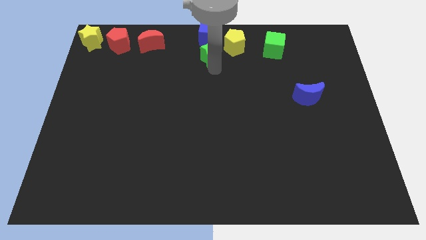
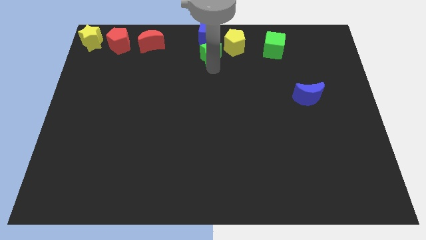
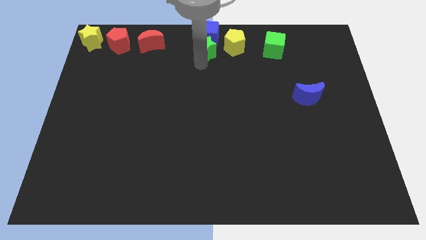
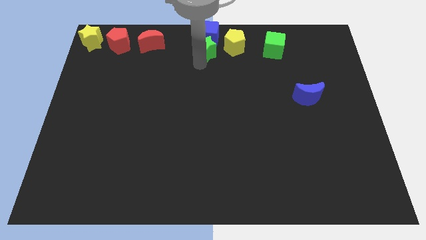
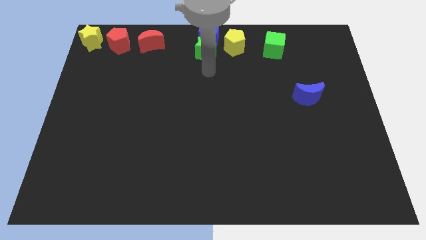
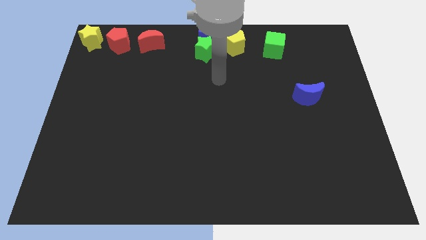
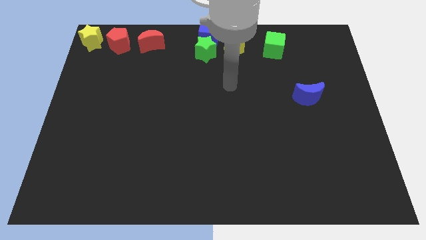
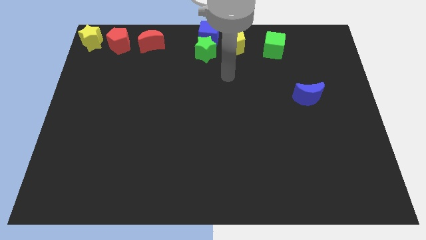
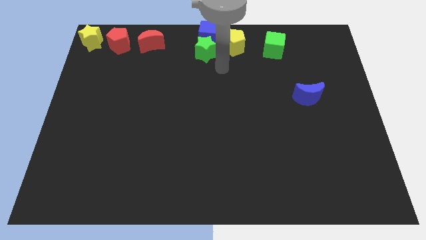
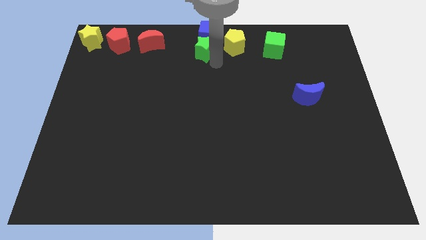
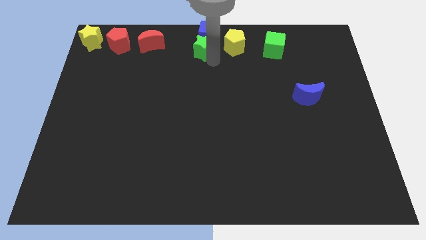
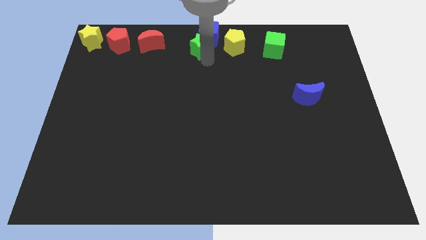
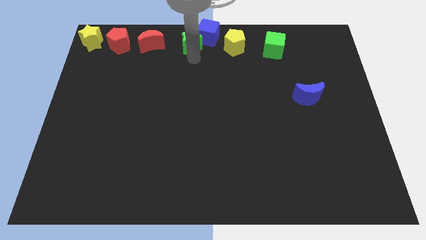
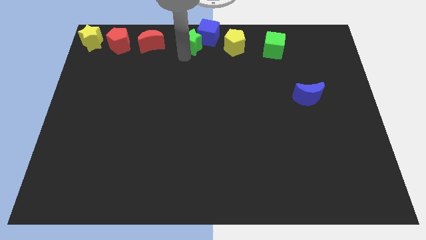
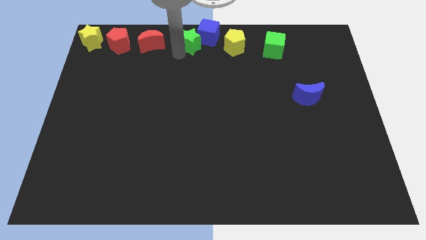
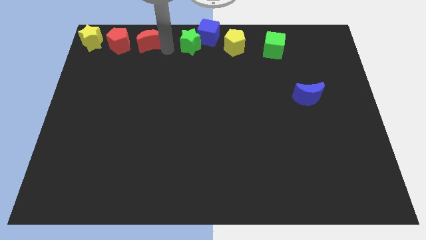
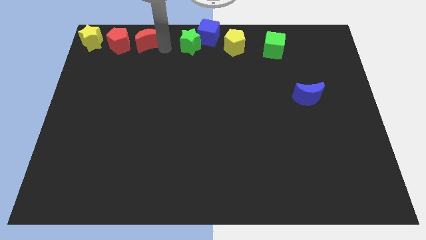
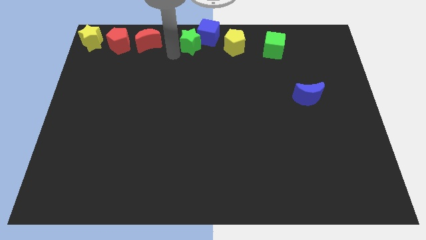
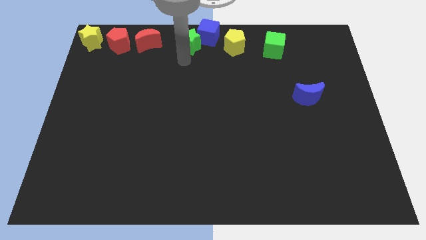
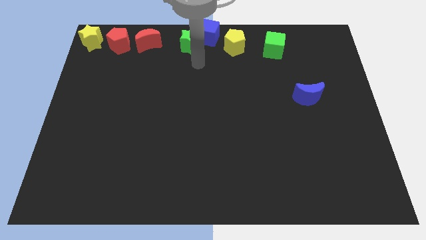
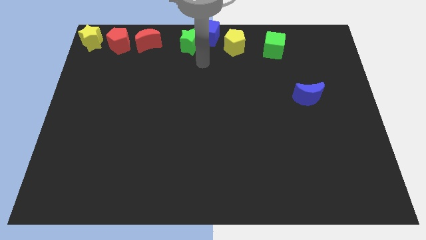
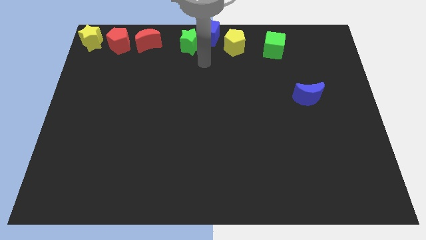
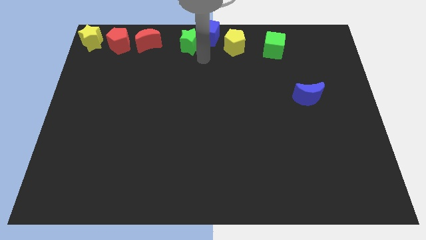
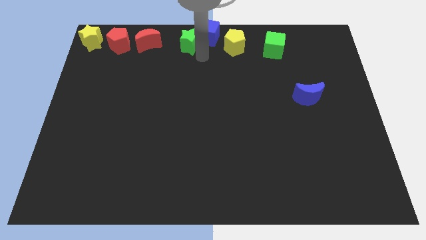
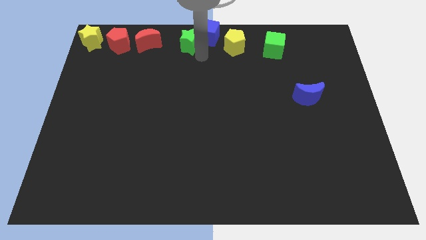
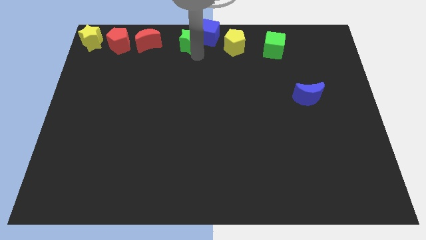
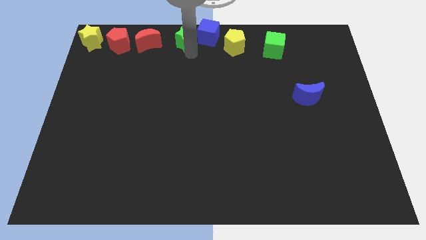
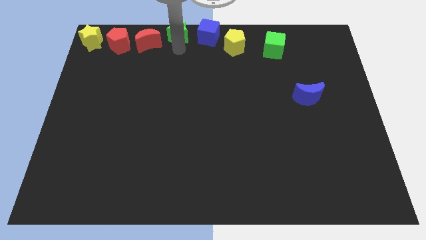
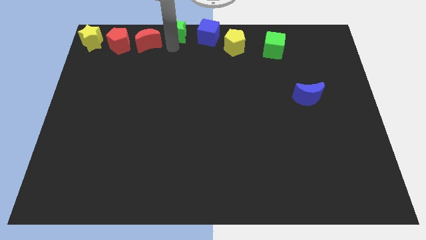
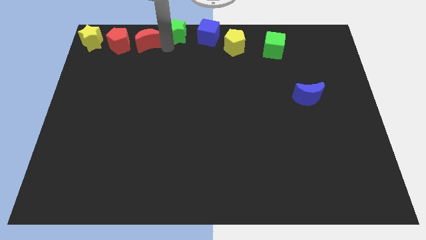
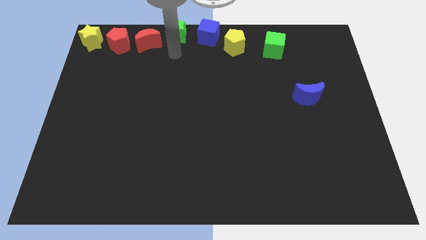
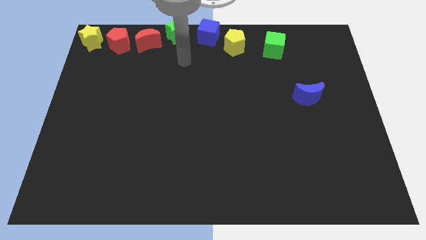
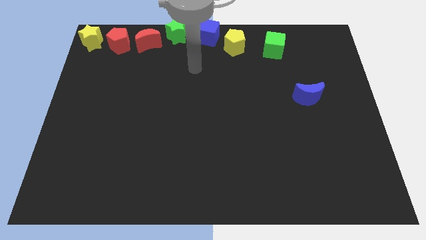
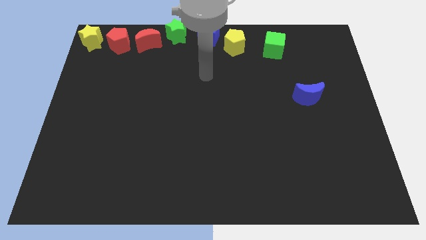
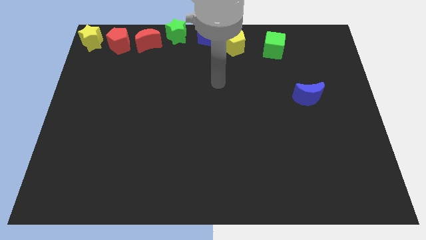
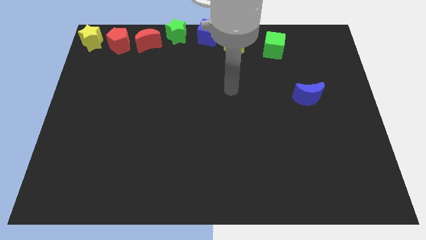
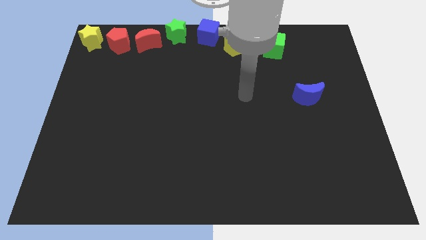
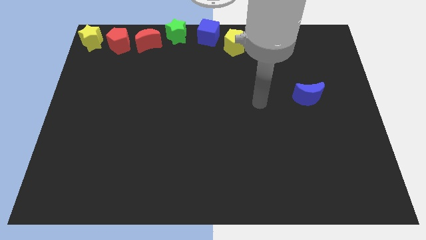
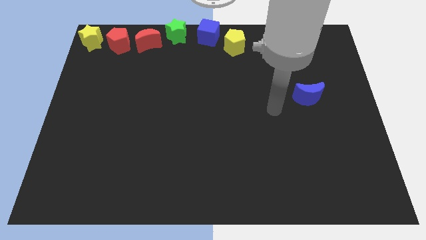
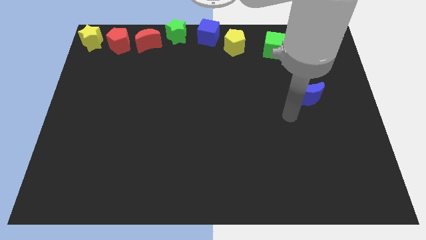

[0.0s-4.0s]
place the green star in between red moon and blue cube

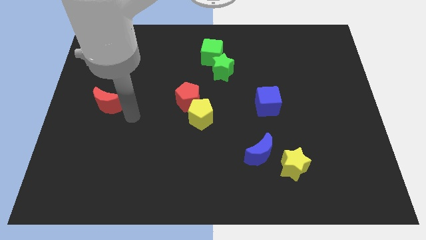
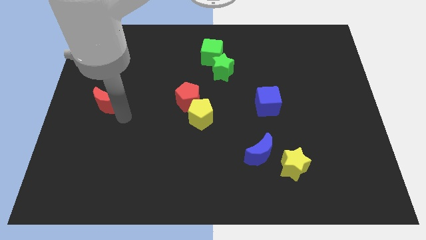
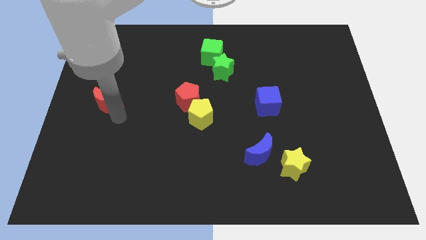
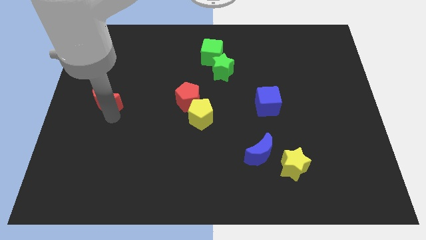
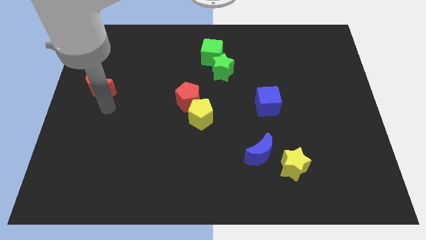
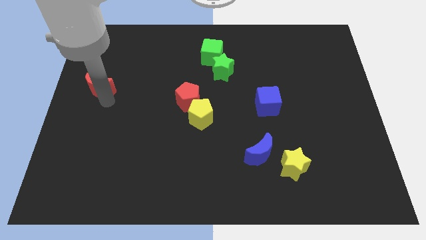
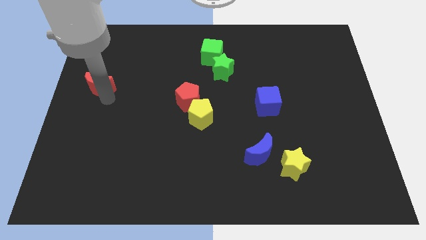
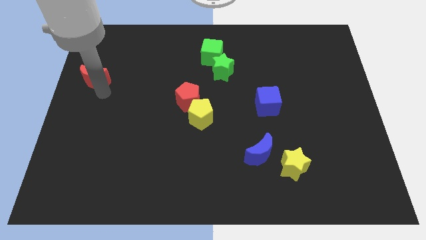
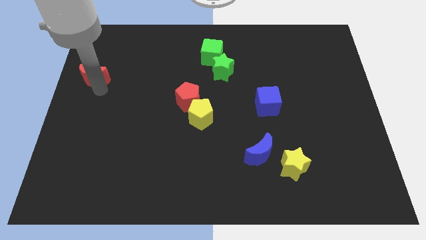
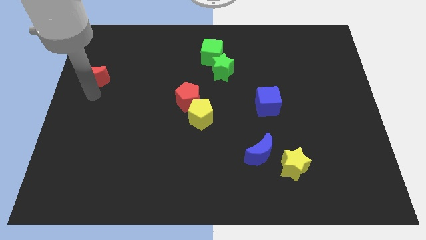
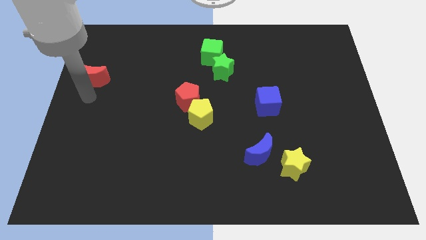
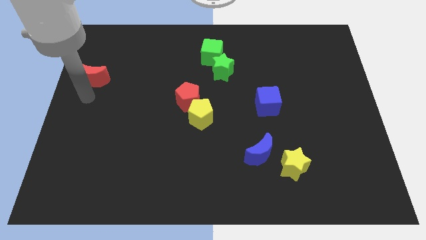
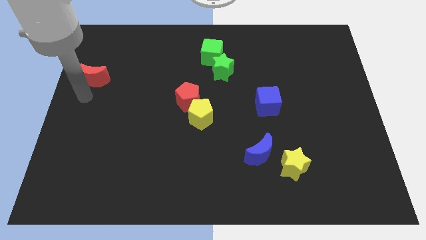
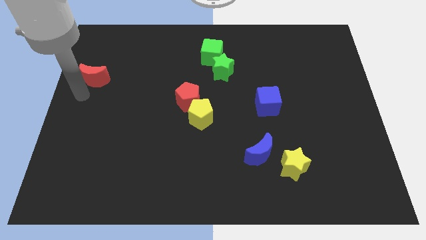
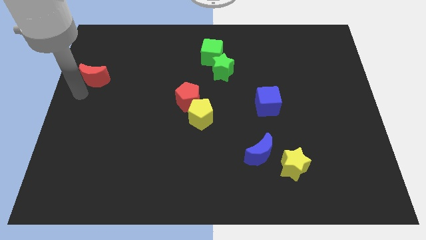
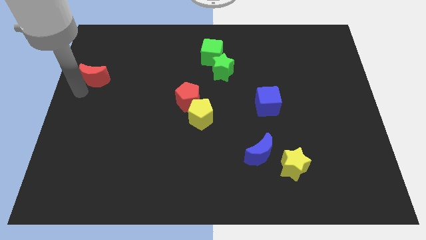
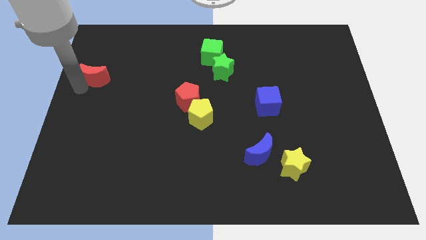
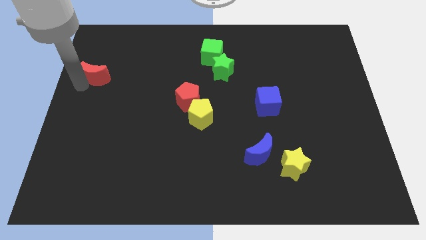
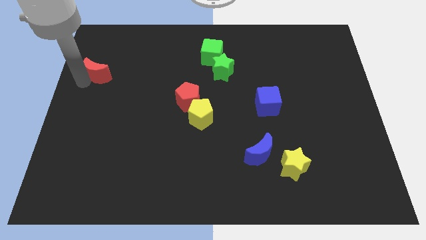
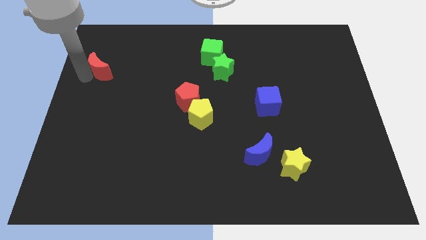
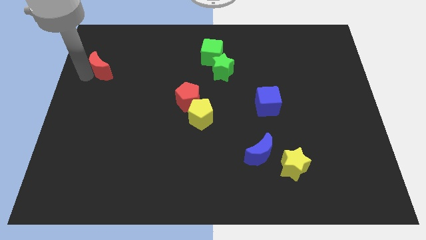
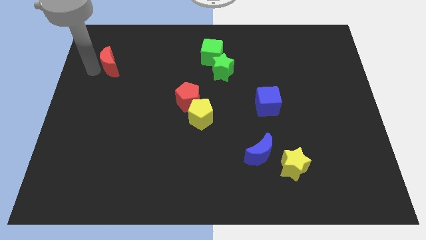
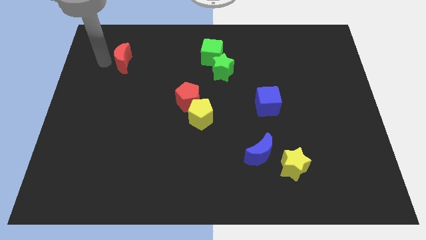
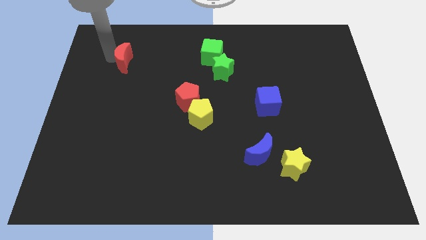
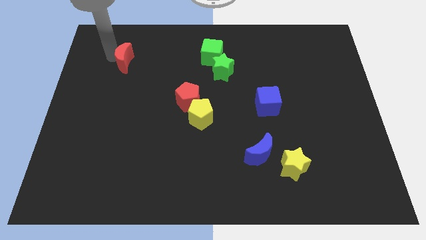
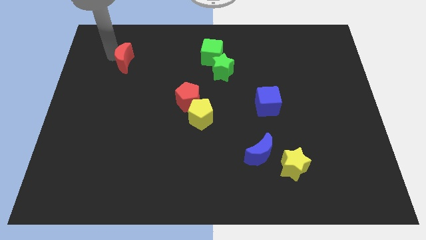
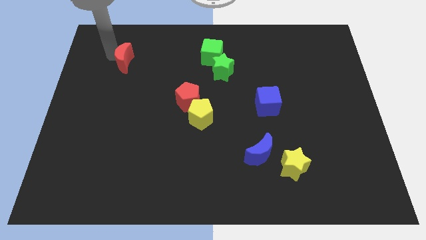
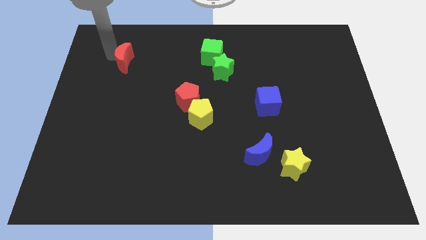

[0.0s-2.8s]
push the red moon upwards slightly

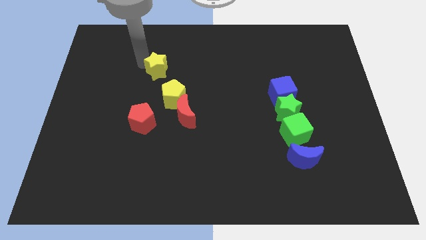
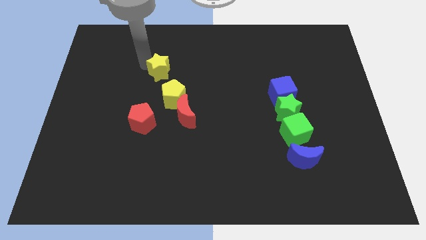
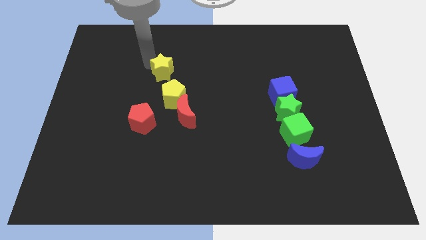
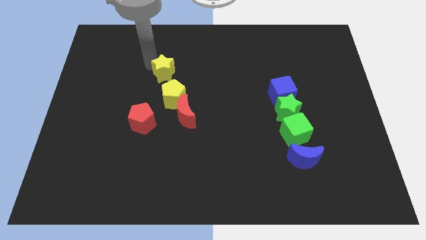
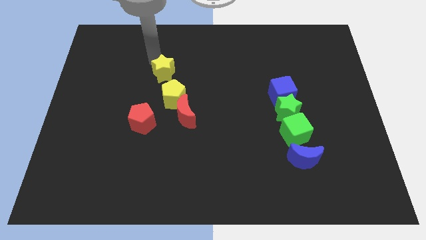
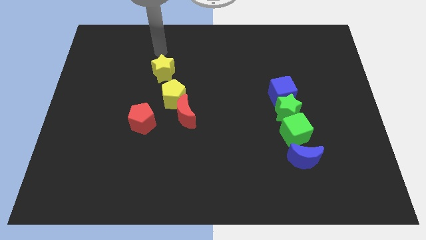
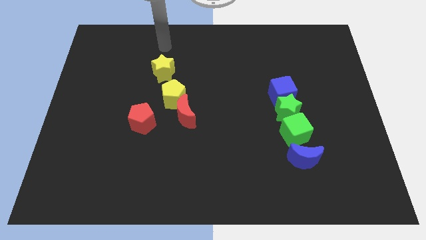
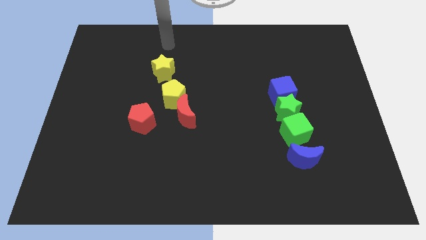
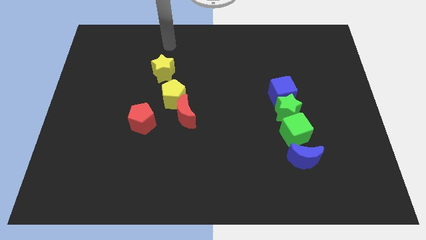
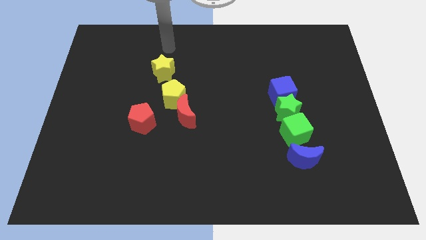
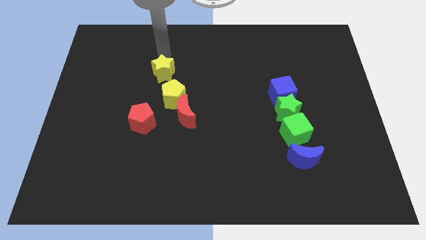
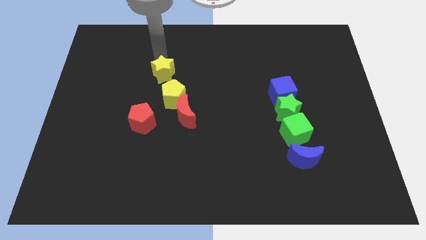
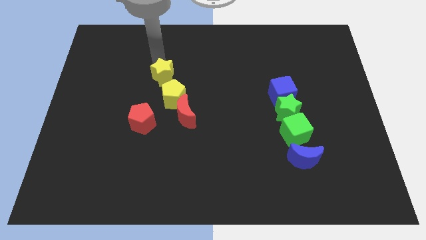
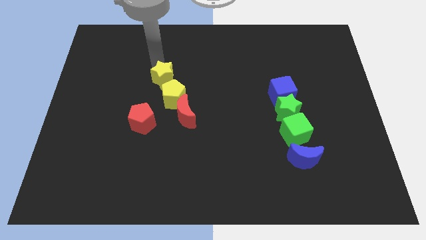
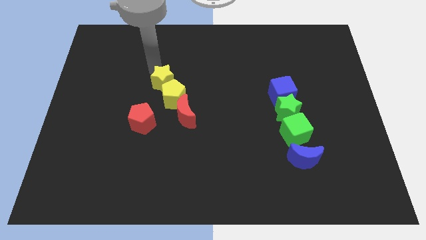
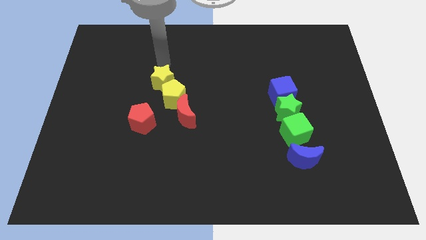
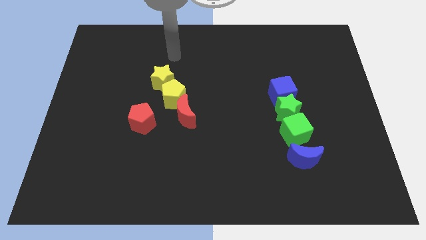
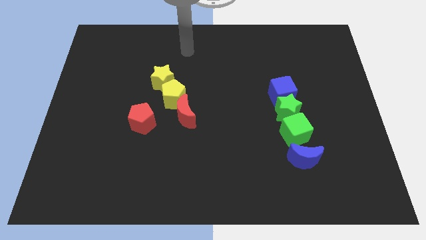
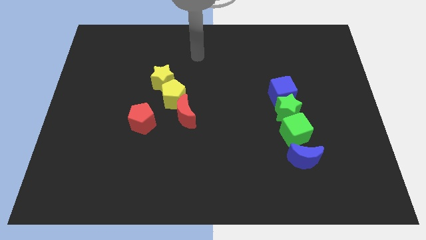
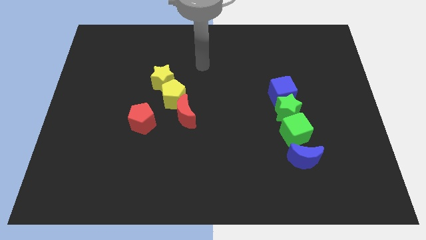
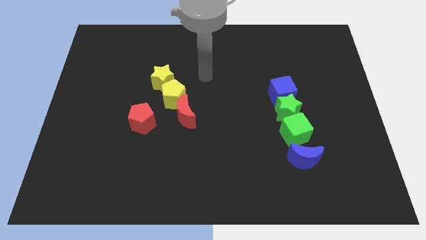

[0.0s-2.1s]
slide yellow star into yellow pentagon

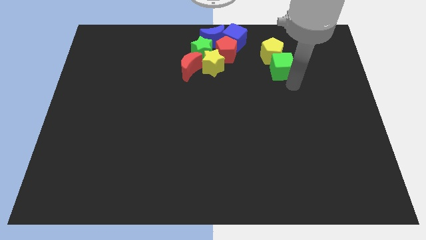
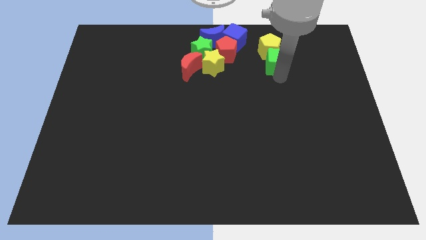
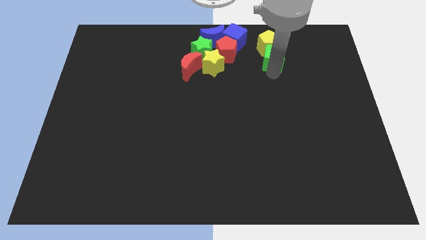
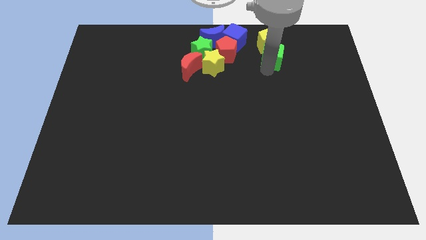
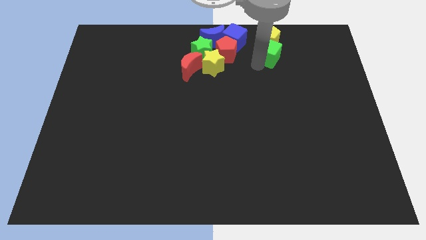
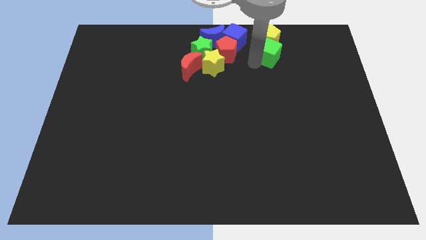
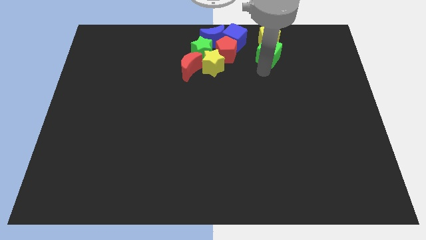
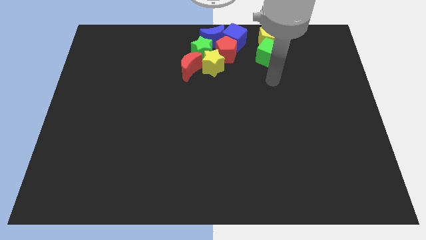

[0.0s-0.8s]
push the green cube and yellow pentagon to the top of the board
